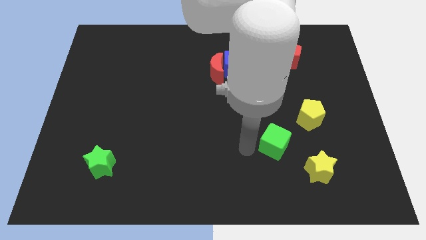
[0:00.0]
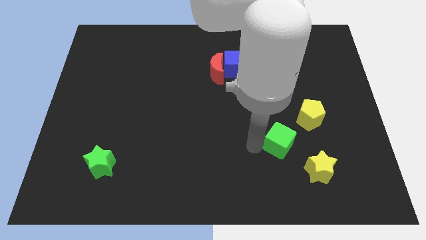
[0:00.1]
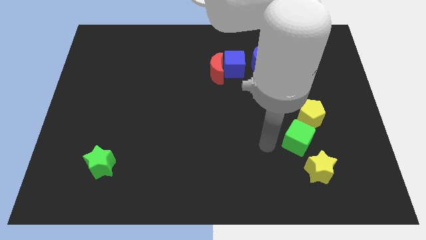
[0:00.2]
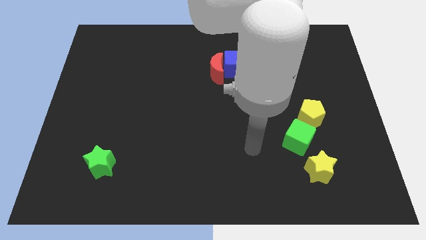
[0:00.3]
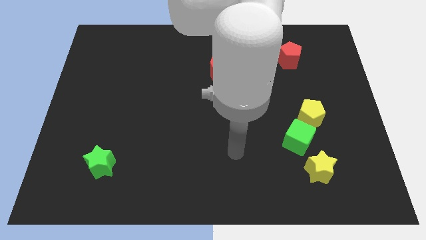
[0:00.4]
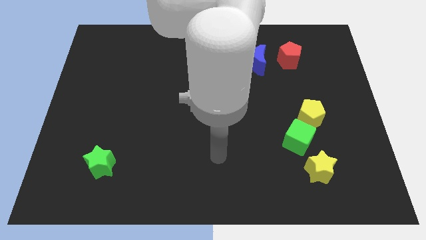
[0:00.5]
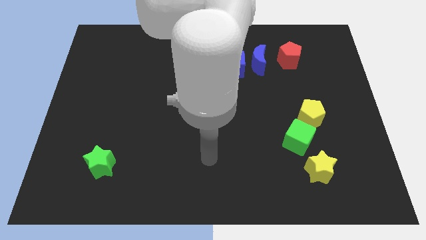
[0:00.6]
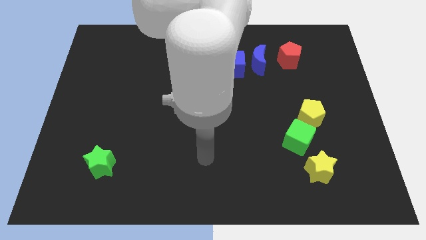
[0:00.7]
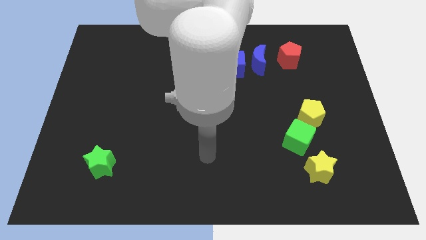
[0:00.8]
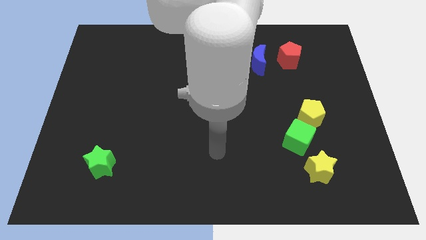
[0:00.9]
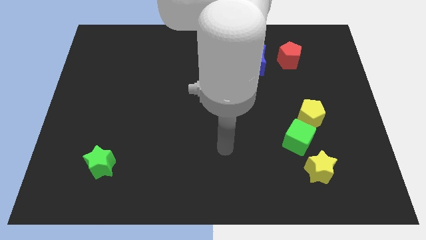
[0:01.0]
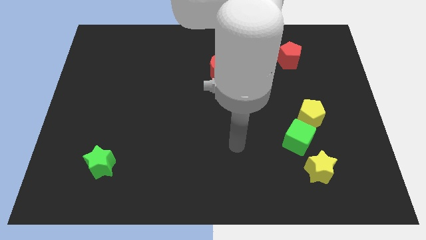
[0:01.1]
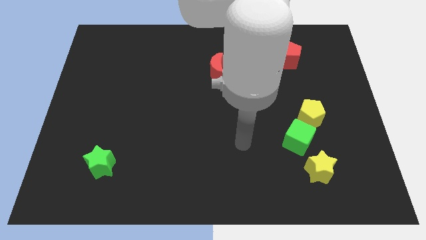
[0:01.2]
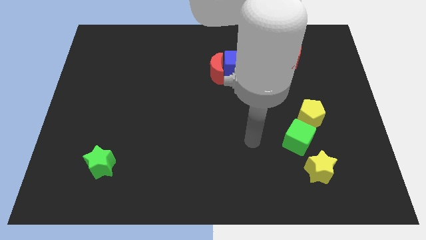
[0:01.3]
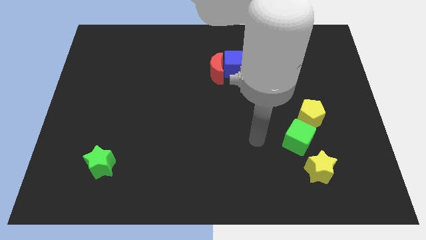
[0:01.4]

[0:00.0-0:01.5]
place the green cube to the bottom left side of the yellow pentagon

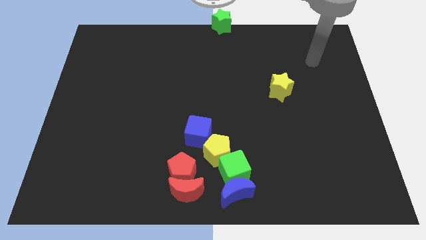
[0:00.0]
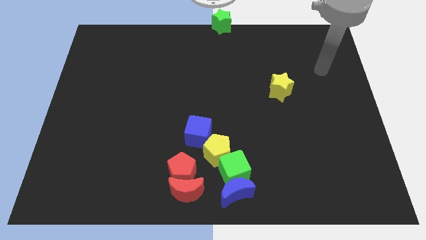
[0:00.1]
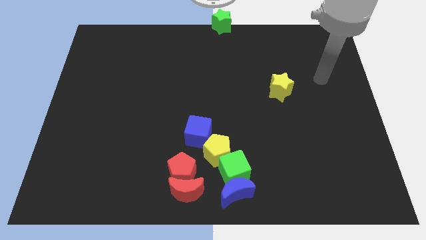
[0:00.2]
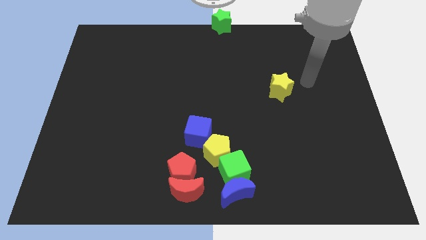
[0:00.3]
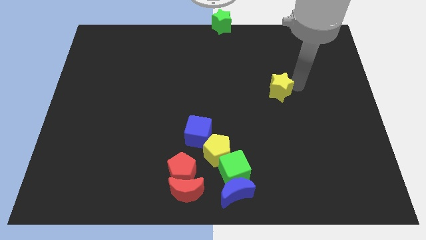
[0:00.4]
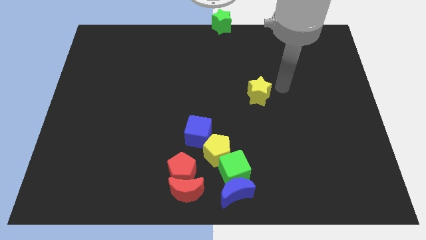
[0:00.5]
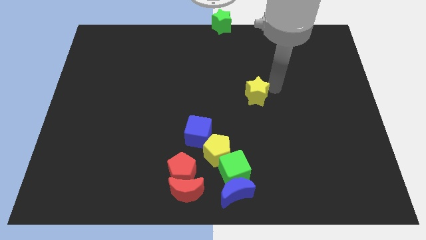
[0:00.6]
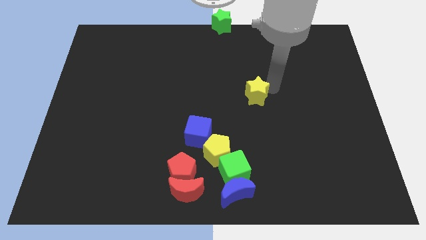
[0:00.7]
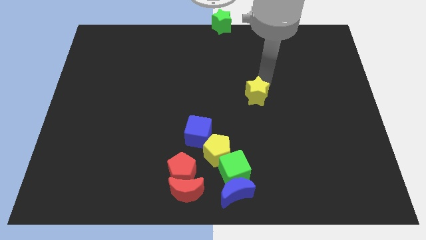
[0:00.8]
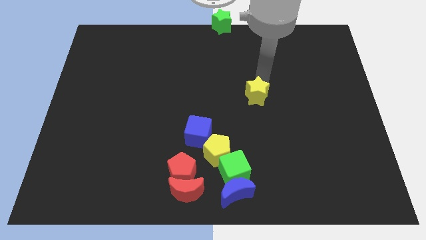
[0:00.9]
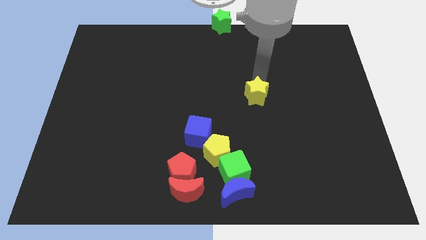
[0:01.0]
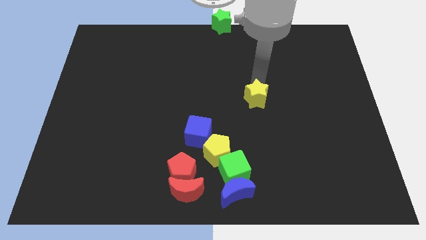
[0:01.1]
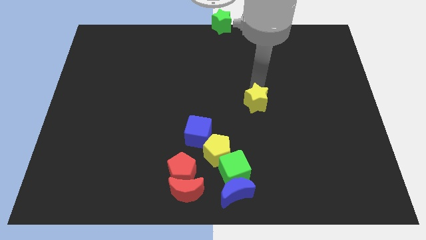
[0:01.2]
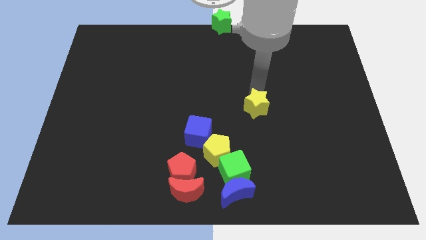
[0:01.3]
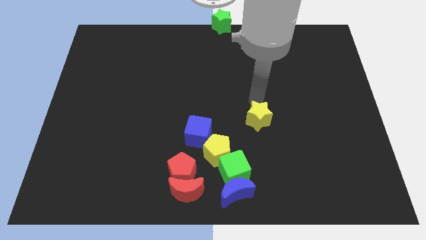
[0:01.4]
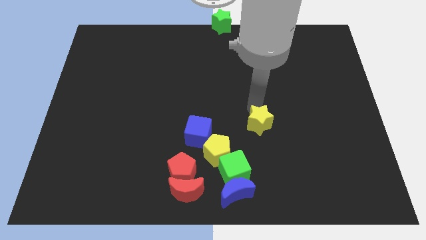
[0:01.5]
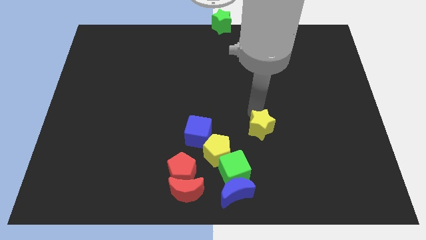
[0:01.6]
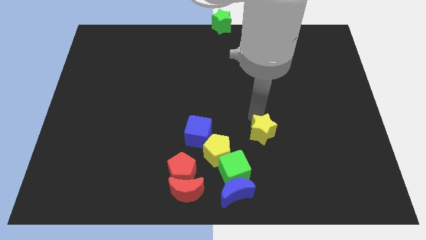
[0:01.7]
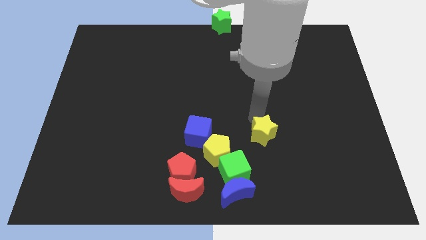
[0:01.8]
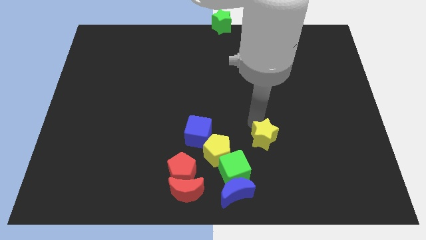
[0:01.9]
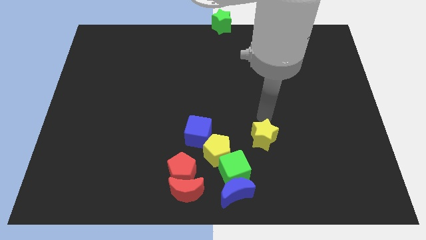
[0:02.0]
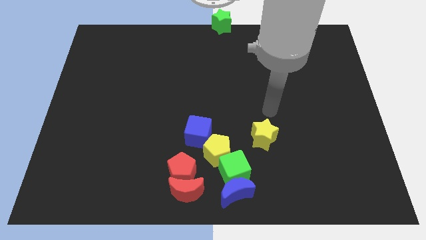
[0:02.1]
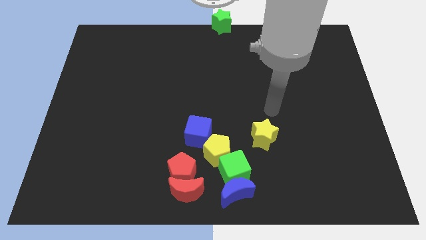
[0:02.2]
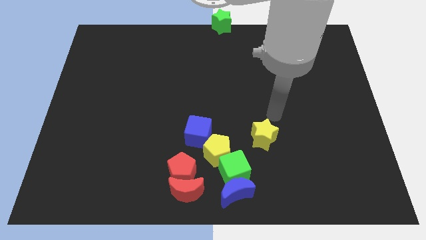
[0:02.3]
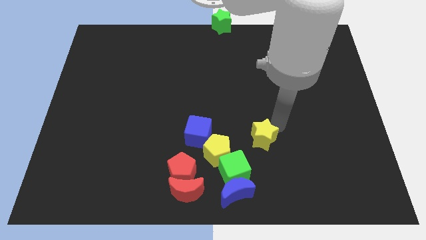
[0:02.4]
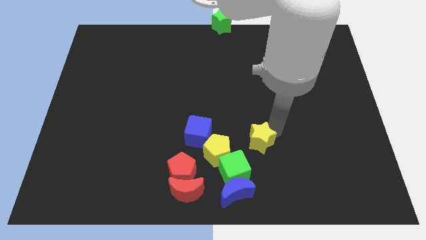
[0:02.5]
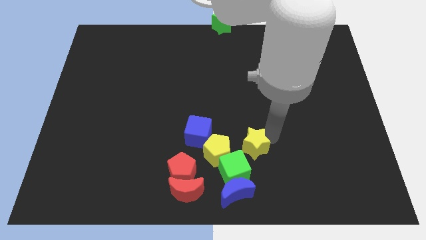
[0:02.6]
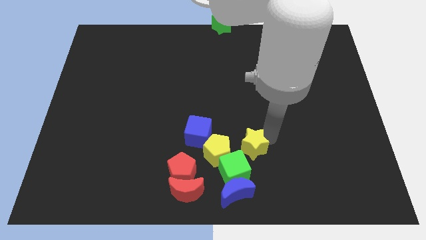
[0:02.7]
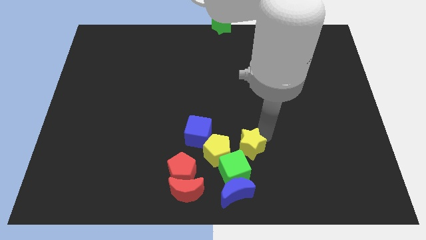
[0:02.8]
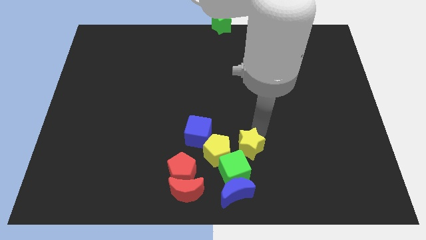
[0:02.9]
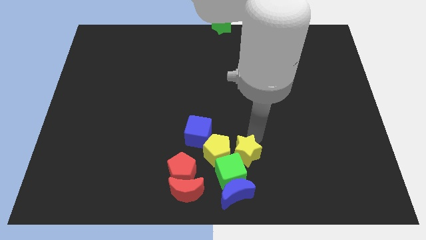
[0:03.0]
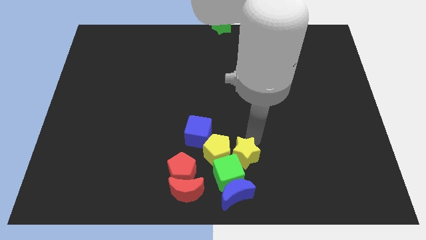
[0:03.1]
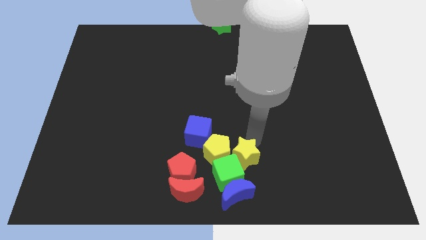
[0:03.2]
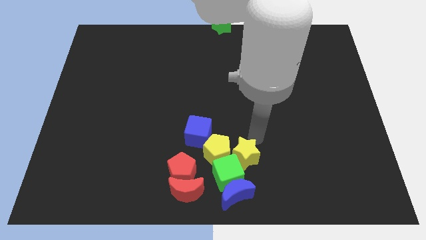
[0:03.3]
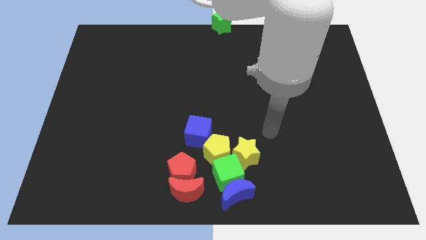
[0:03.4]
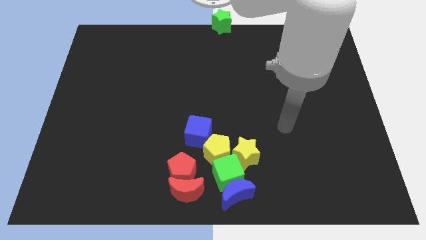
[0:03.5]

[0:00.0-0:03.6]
push the yellow star into the green cube

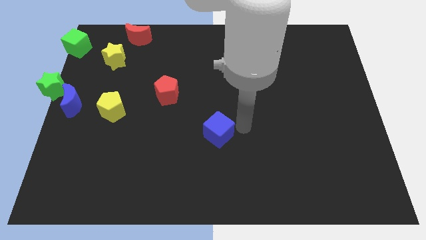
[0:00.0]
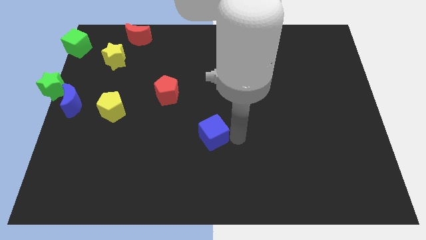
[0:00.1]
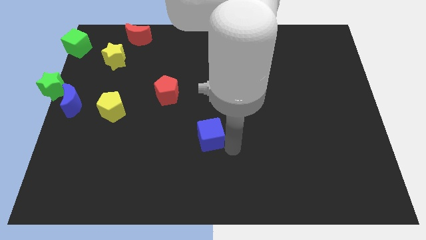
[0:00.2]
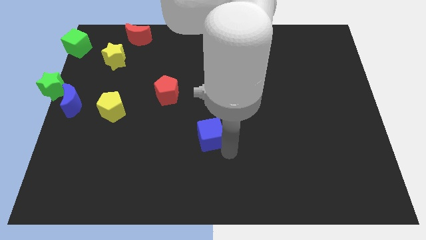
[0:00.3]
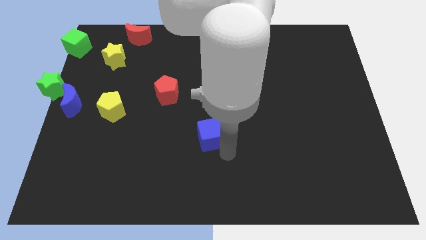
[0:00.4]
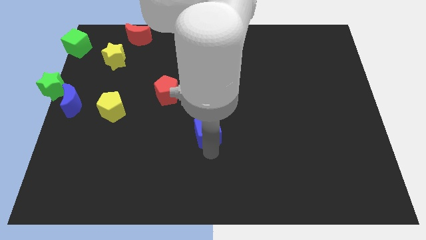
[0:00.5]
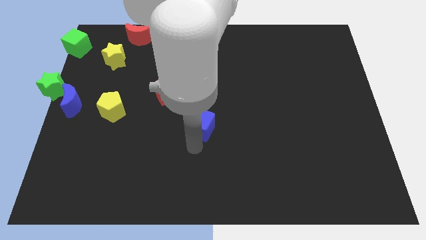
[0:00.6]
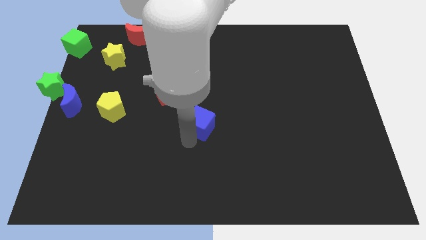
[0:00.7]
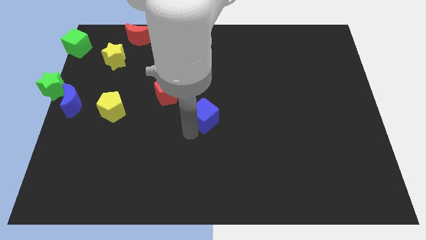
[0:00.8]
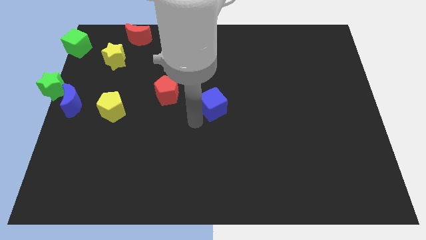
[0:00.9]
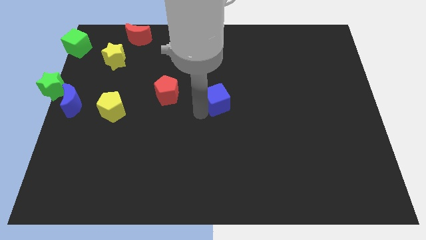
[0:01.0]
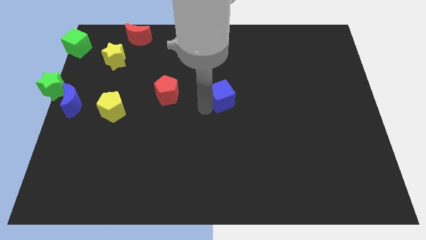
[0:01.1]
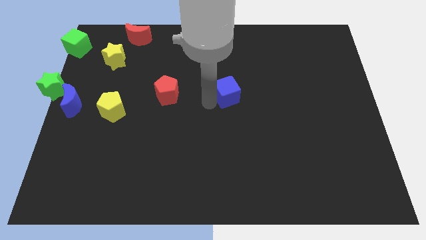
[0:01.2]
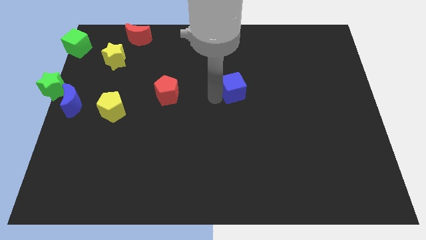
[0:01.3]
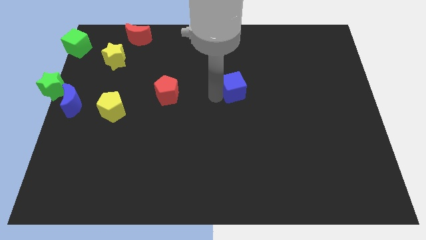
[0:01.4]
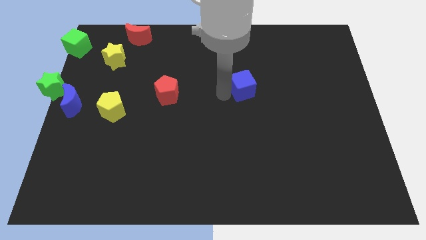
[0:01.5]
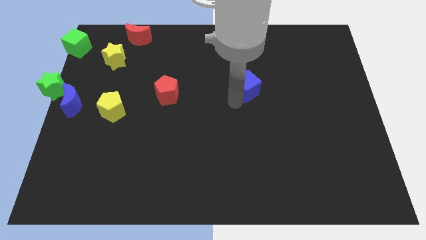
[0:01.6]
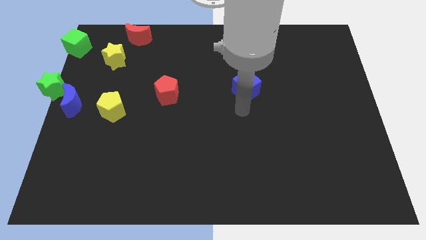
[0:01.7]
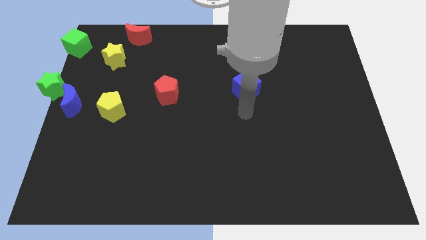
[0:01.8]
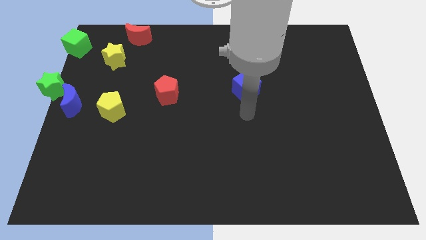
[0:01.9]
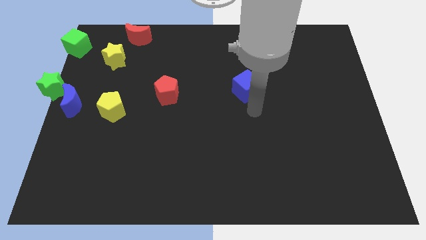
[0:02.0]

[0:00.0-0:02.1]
place blue cube to right of red pentagon

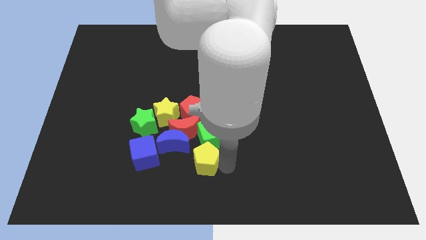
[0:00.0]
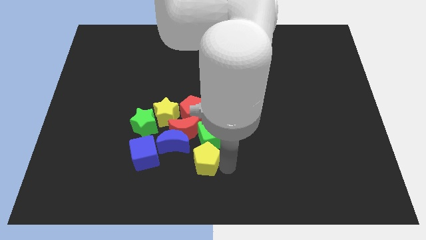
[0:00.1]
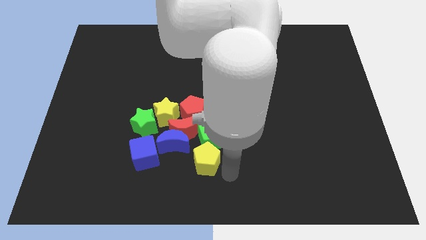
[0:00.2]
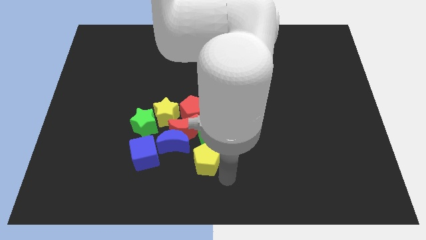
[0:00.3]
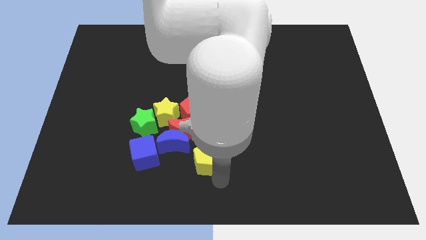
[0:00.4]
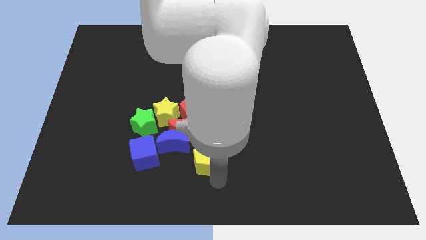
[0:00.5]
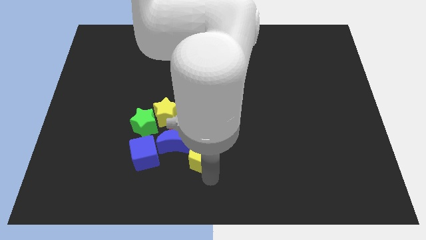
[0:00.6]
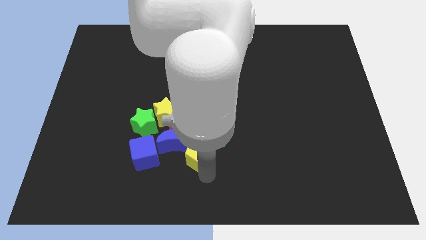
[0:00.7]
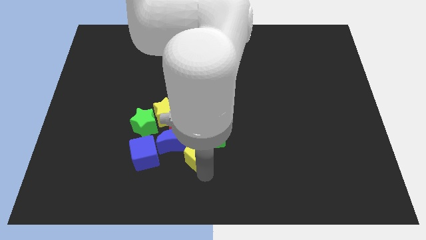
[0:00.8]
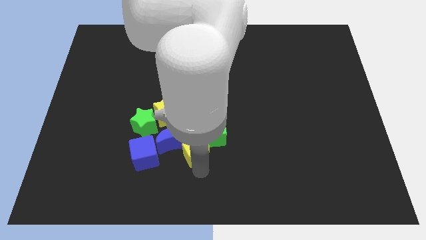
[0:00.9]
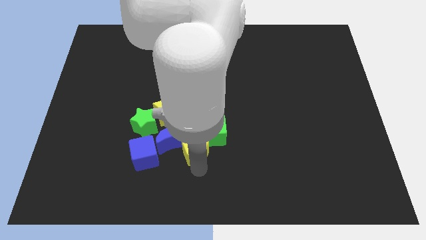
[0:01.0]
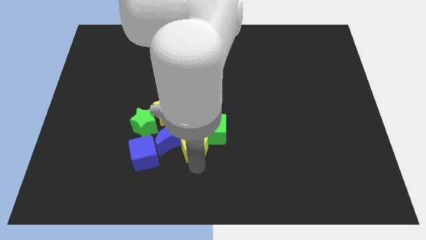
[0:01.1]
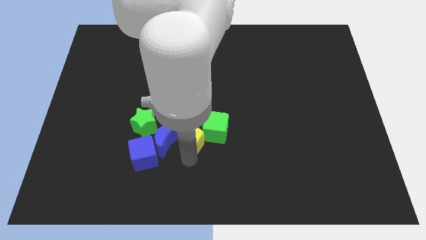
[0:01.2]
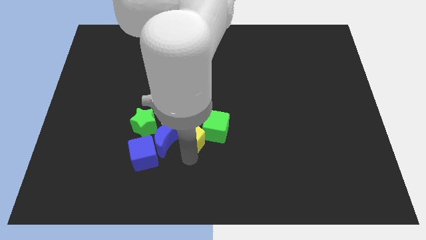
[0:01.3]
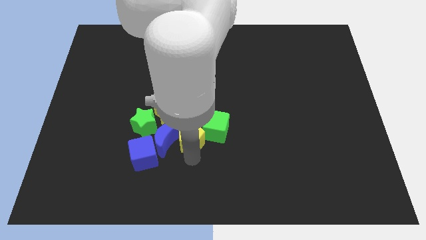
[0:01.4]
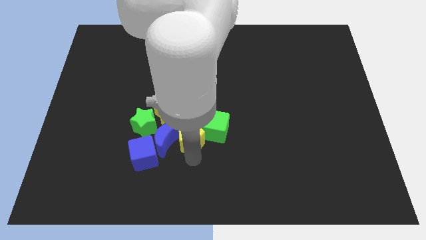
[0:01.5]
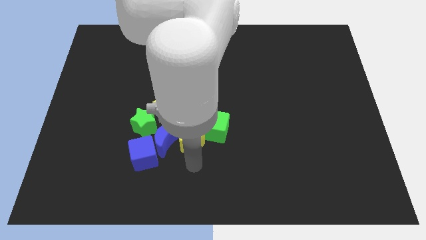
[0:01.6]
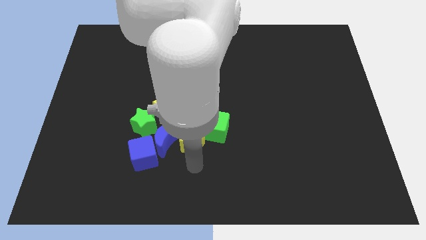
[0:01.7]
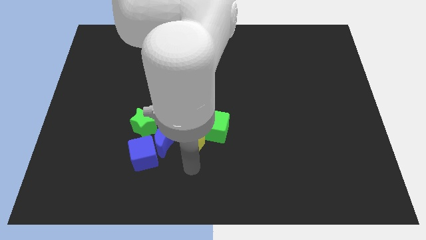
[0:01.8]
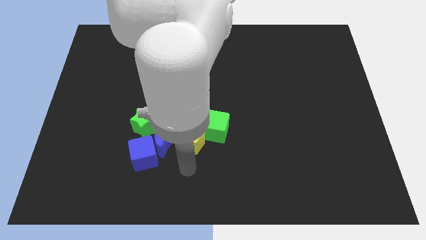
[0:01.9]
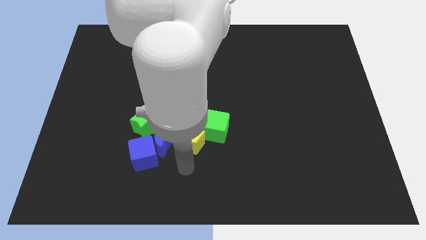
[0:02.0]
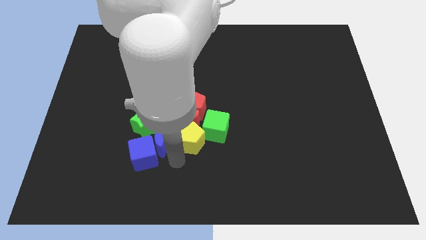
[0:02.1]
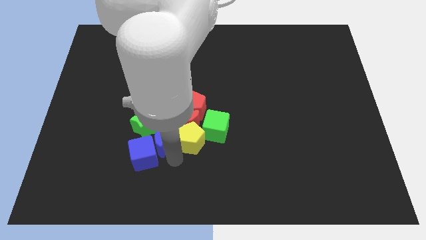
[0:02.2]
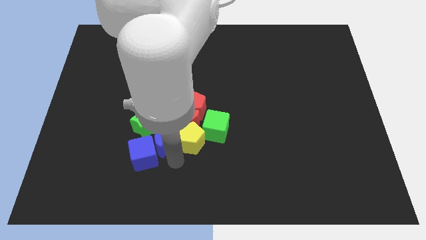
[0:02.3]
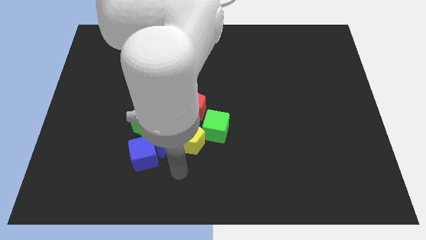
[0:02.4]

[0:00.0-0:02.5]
push the yellow pentagon into the red moon
